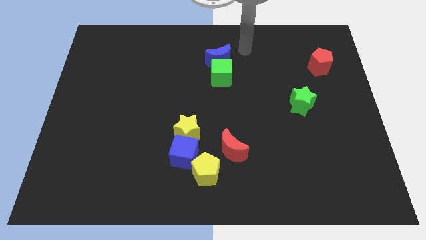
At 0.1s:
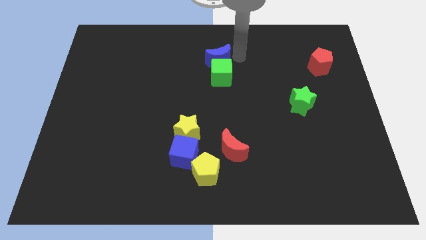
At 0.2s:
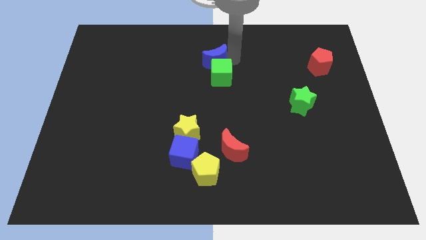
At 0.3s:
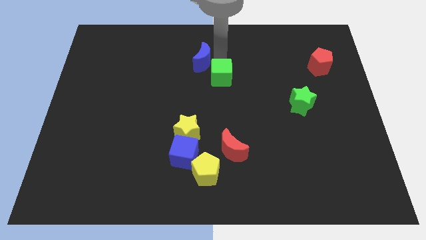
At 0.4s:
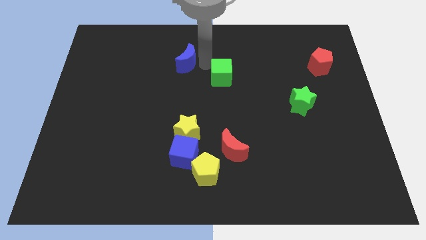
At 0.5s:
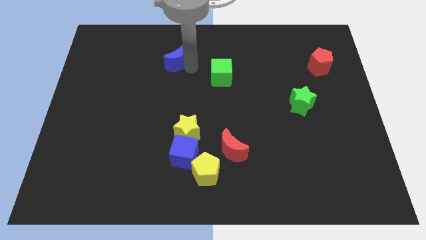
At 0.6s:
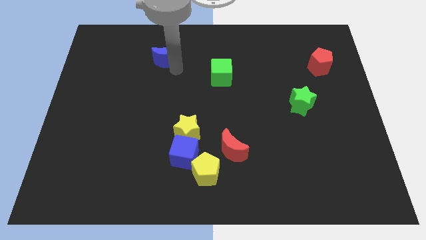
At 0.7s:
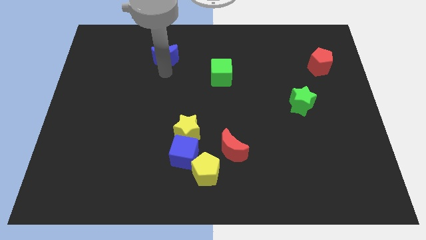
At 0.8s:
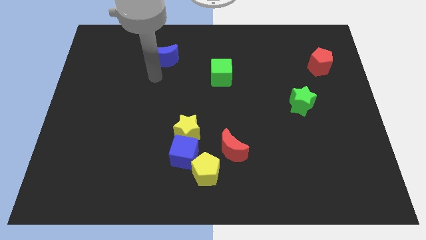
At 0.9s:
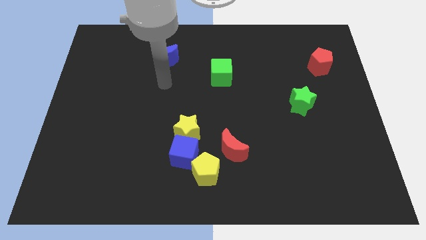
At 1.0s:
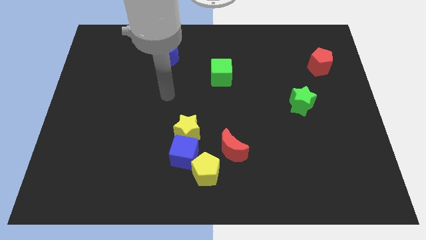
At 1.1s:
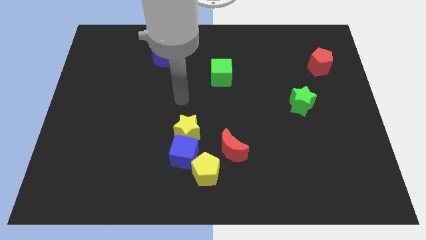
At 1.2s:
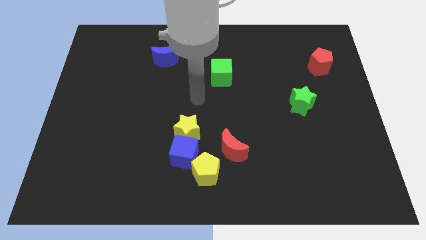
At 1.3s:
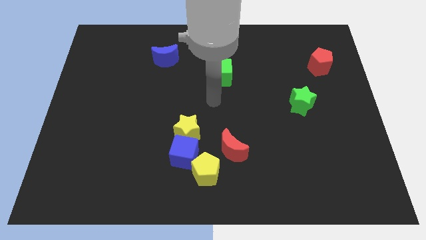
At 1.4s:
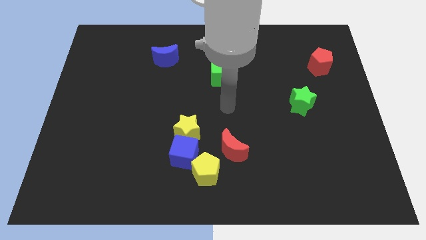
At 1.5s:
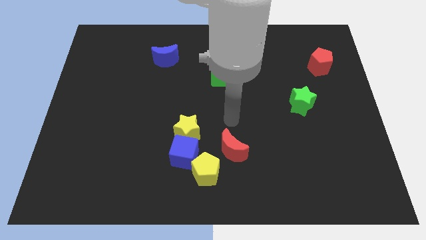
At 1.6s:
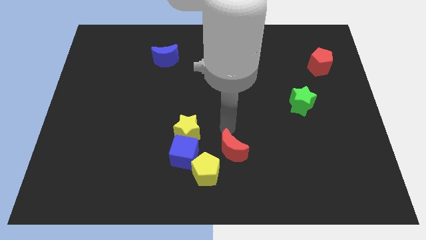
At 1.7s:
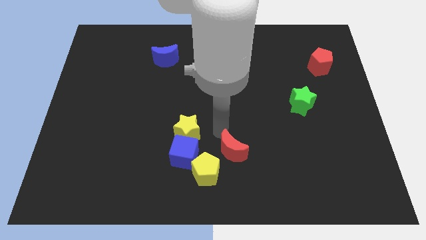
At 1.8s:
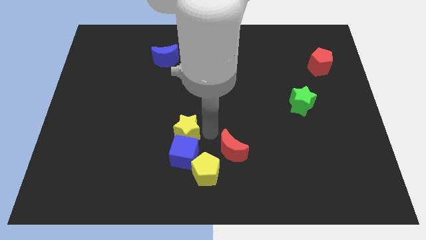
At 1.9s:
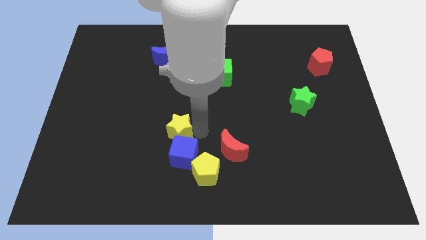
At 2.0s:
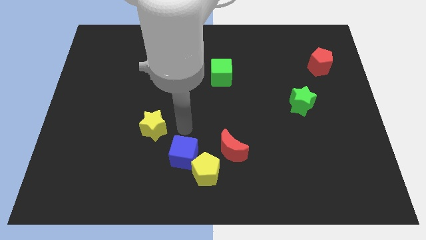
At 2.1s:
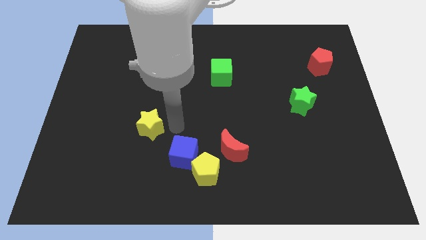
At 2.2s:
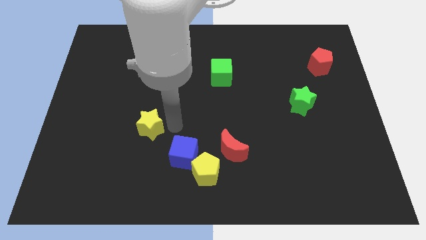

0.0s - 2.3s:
place yellow star below blue crescent

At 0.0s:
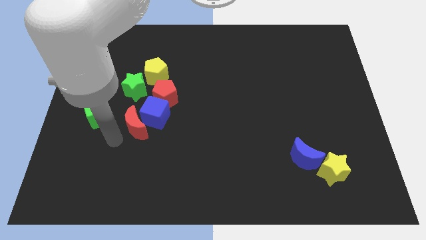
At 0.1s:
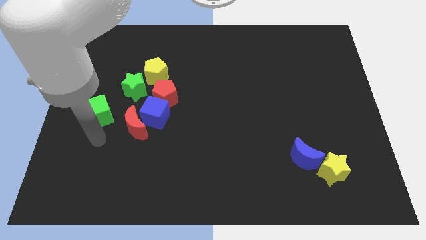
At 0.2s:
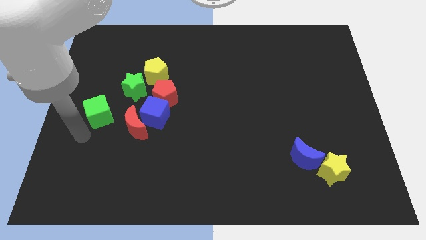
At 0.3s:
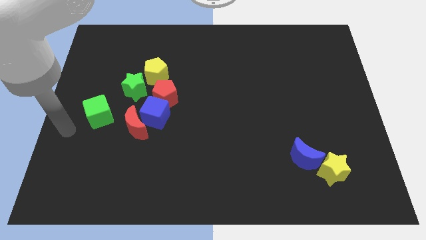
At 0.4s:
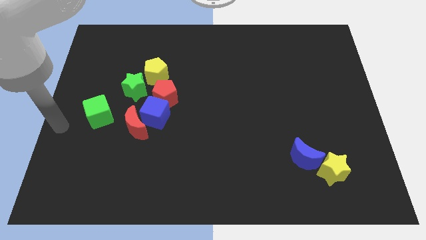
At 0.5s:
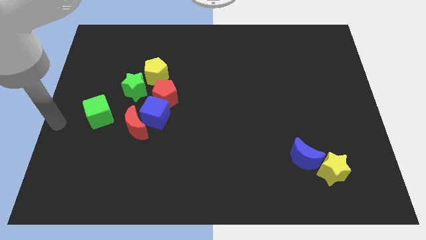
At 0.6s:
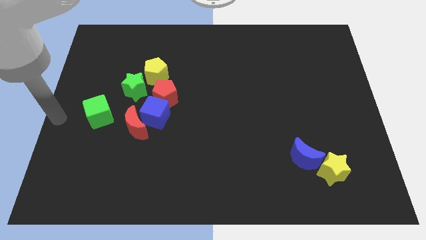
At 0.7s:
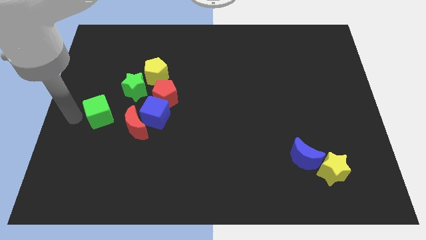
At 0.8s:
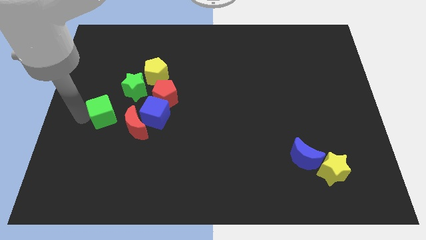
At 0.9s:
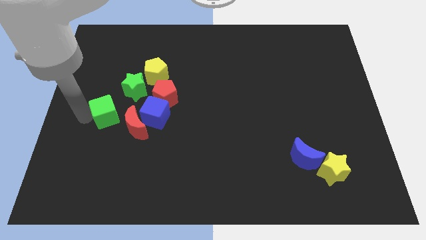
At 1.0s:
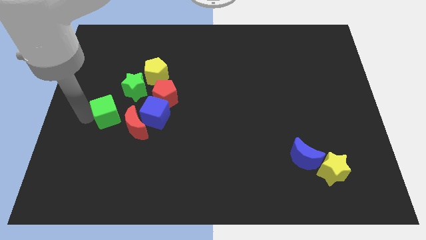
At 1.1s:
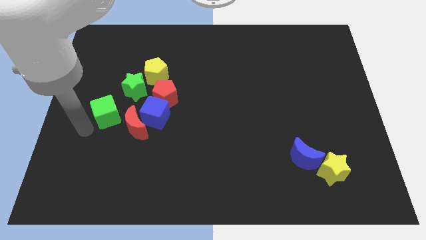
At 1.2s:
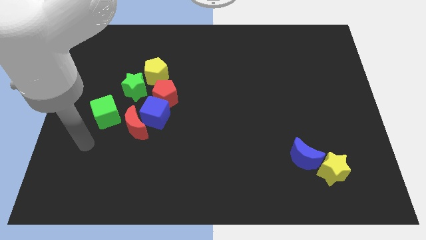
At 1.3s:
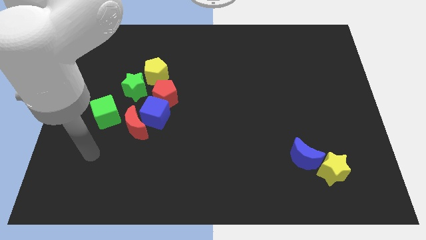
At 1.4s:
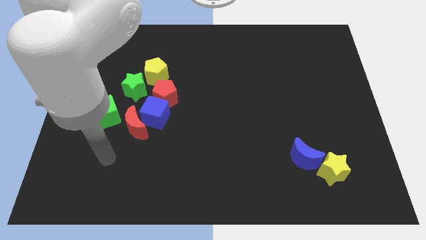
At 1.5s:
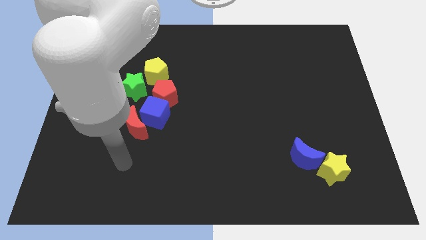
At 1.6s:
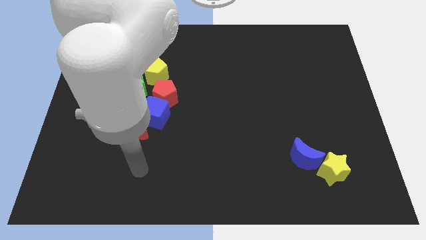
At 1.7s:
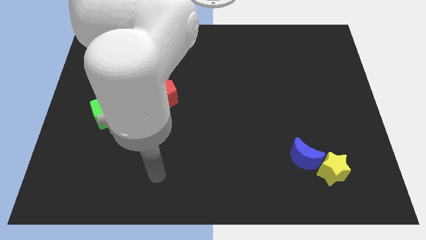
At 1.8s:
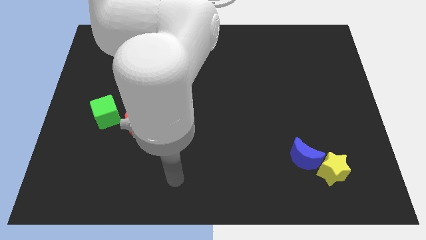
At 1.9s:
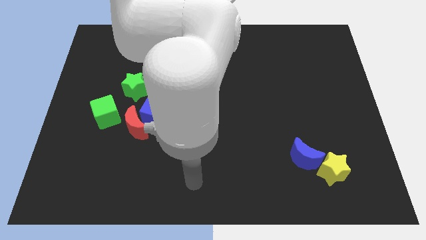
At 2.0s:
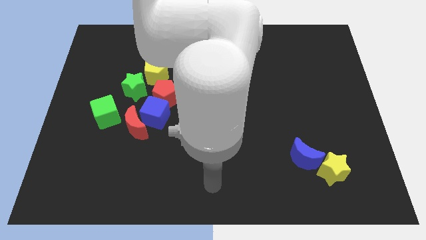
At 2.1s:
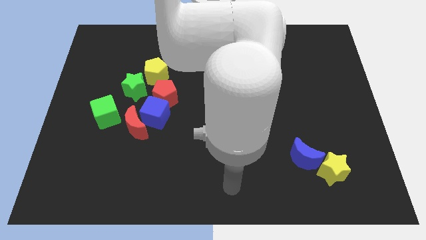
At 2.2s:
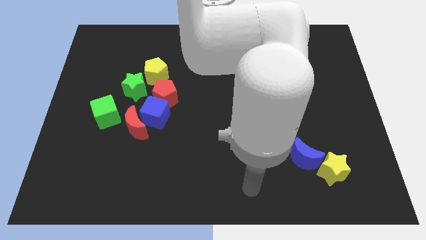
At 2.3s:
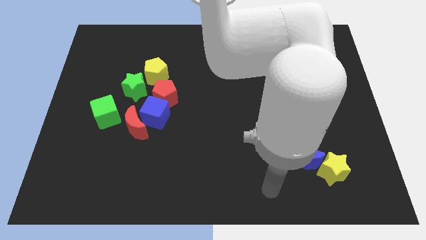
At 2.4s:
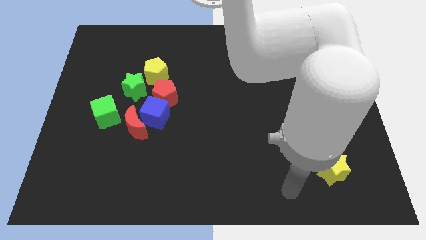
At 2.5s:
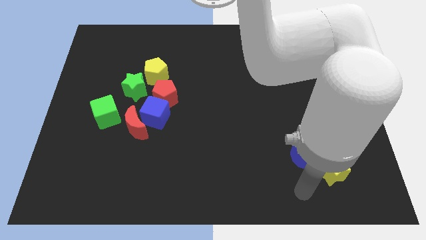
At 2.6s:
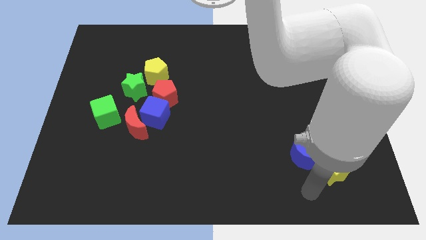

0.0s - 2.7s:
move green cube towards red moon

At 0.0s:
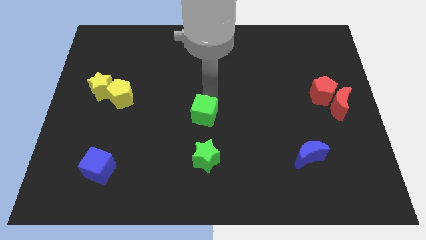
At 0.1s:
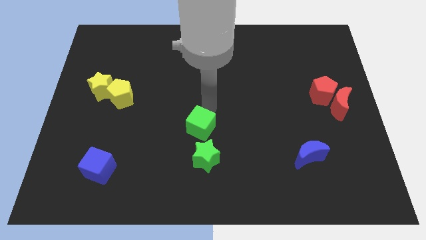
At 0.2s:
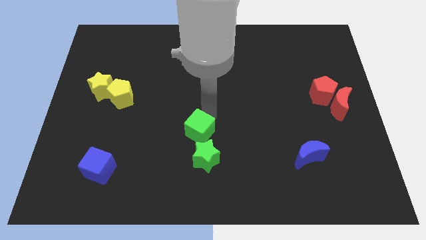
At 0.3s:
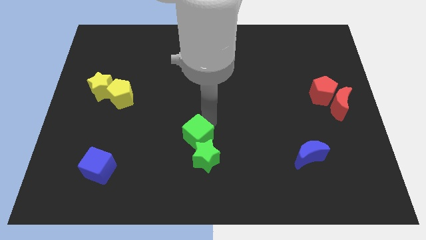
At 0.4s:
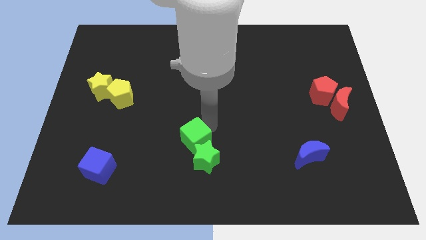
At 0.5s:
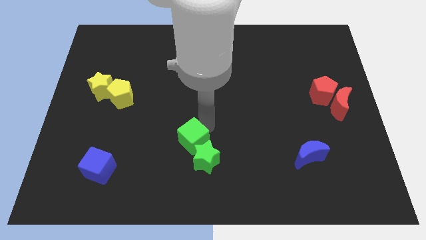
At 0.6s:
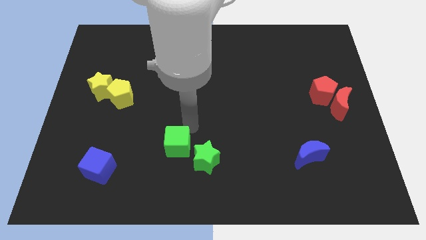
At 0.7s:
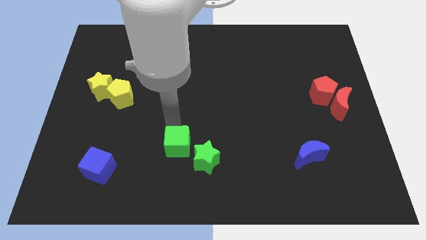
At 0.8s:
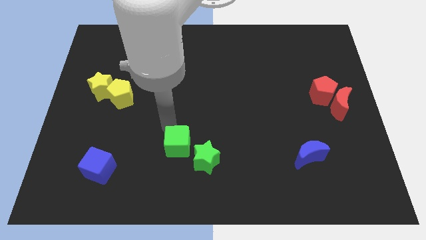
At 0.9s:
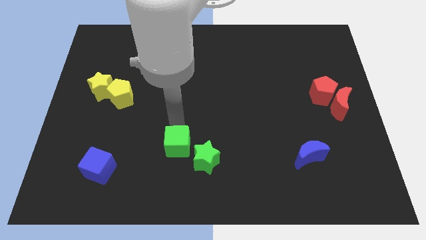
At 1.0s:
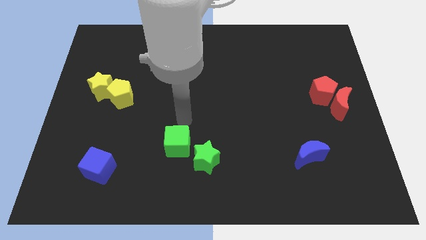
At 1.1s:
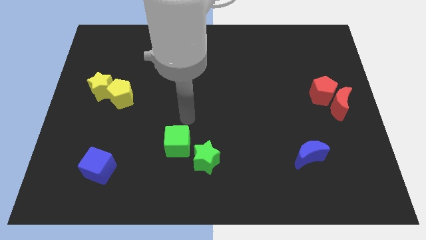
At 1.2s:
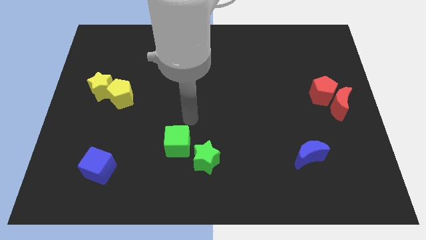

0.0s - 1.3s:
push the green cube into green star

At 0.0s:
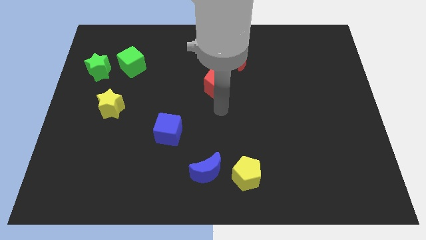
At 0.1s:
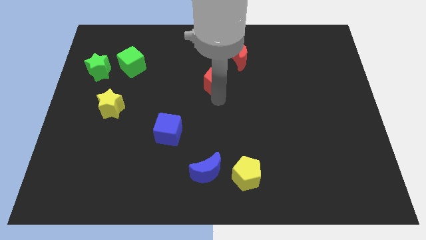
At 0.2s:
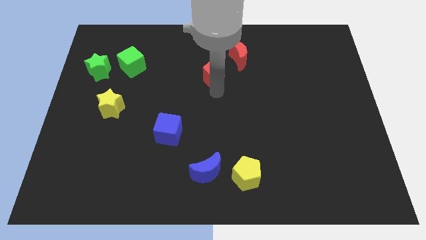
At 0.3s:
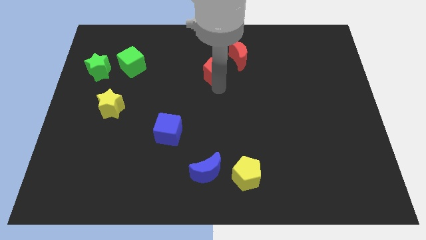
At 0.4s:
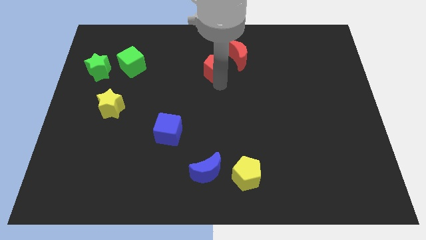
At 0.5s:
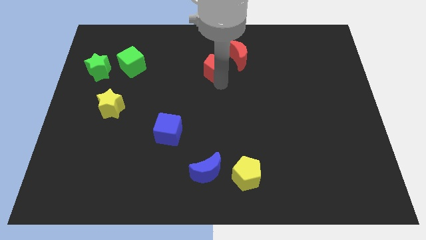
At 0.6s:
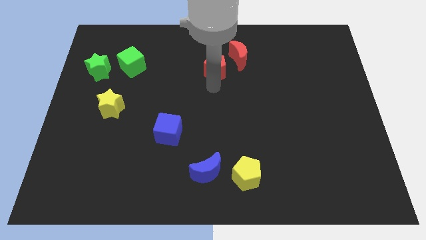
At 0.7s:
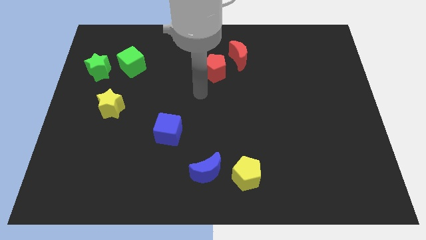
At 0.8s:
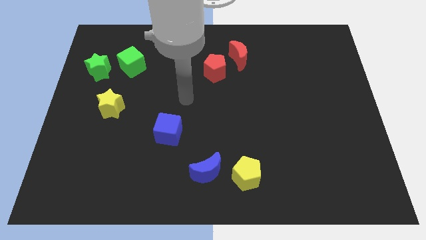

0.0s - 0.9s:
place the red pentagon left to the red crescent

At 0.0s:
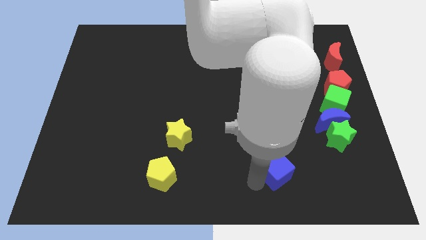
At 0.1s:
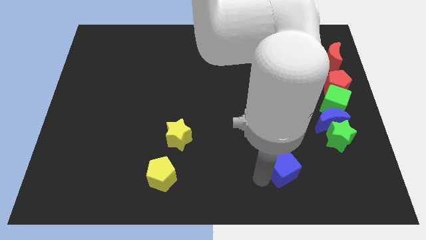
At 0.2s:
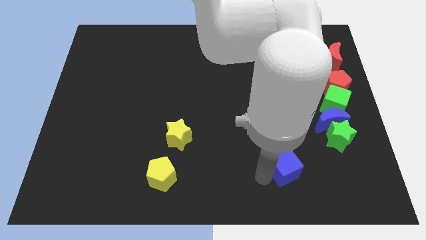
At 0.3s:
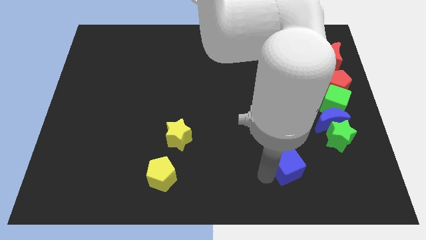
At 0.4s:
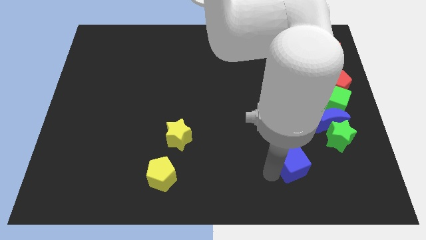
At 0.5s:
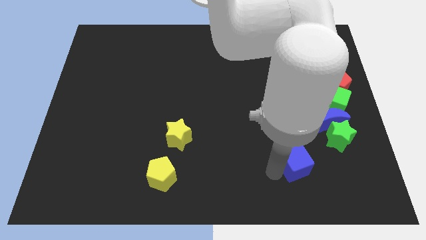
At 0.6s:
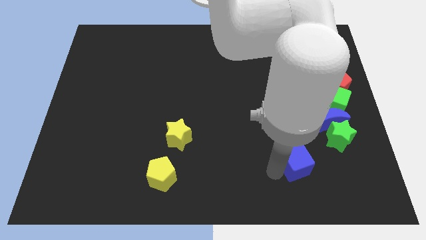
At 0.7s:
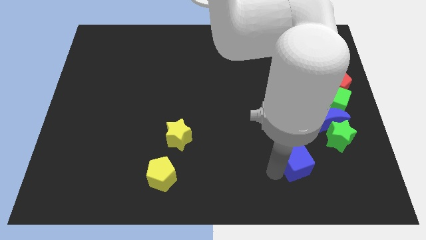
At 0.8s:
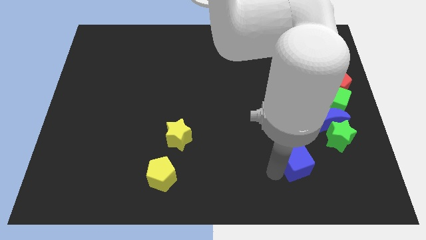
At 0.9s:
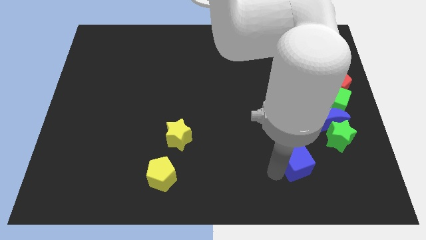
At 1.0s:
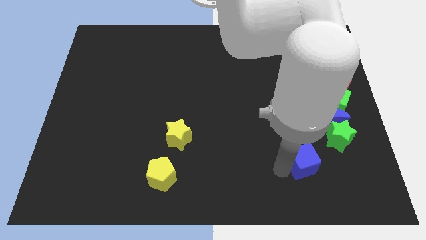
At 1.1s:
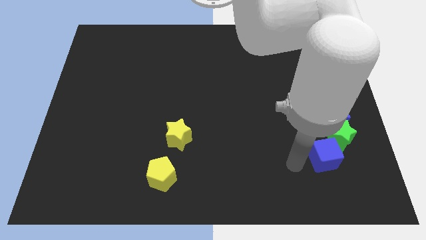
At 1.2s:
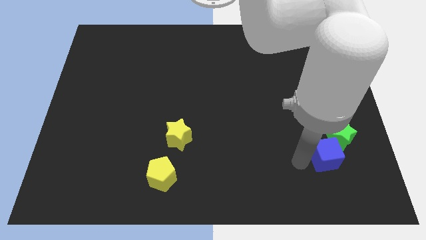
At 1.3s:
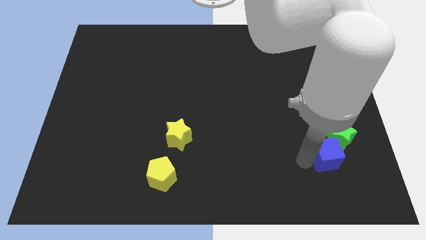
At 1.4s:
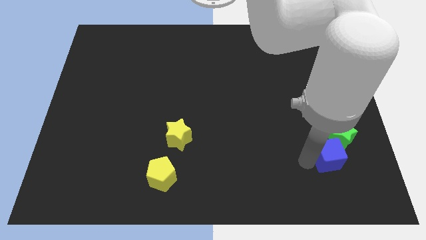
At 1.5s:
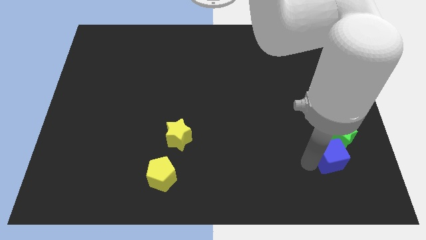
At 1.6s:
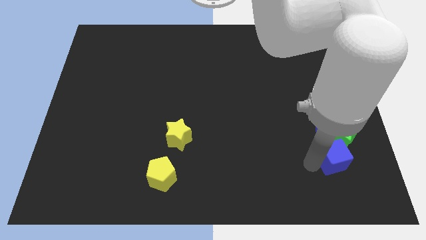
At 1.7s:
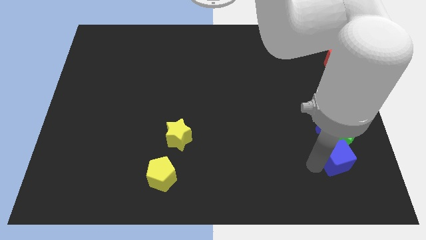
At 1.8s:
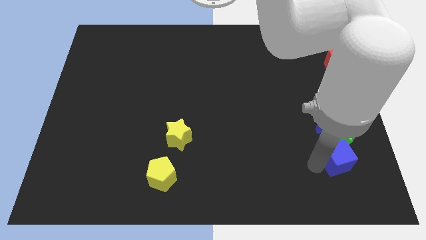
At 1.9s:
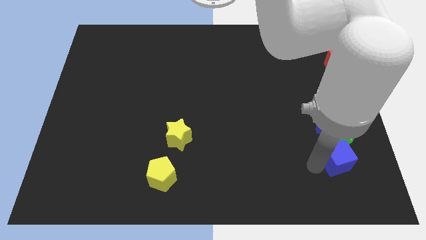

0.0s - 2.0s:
put the blue cube underneath the green star
